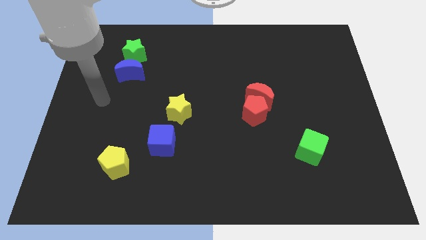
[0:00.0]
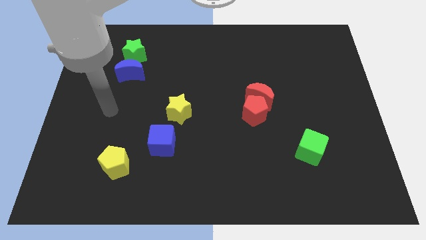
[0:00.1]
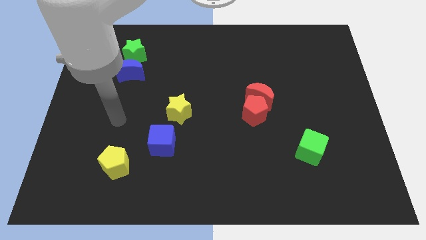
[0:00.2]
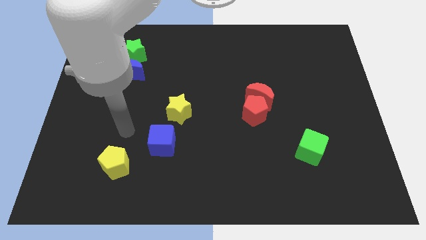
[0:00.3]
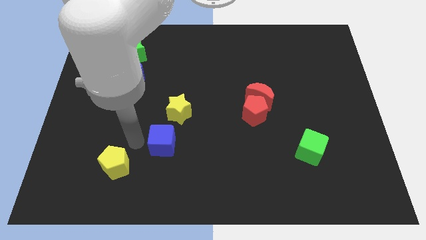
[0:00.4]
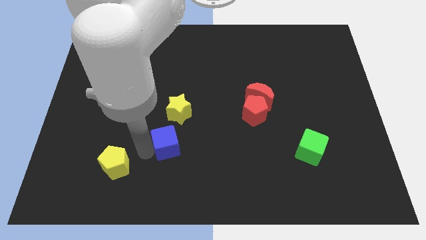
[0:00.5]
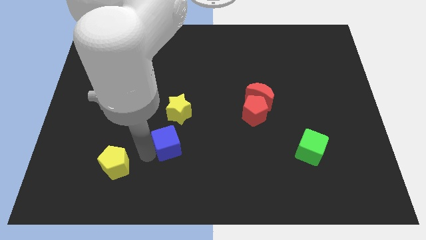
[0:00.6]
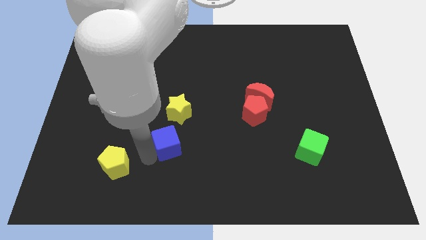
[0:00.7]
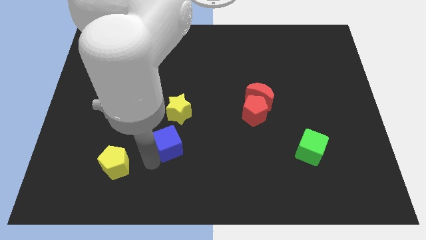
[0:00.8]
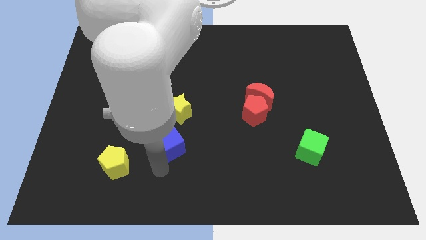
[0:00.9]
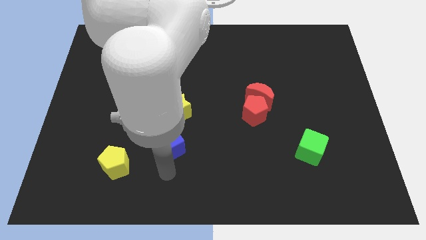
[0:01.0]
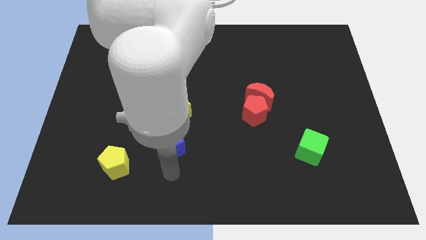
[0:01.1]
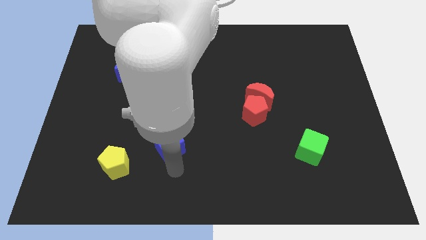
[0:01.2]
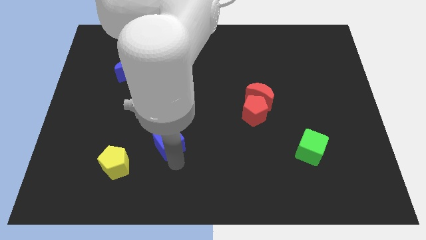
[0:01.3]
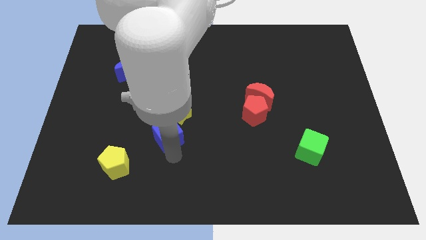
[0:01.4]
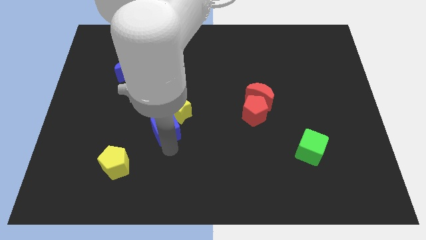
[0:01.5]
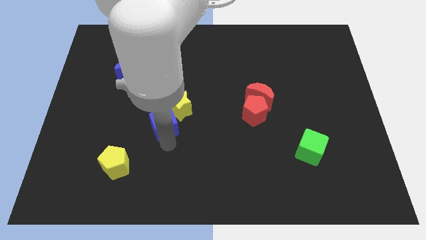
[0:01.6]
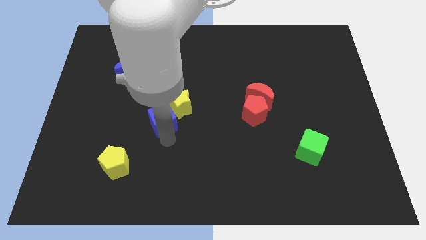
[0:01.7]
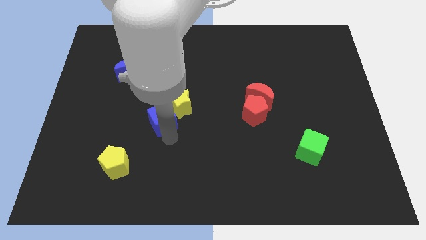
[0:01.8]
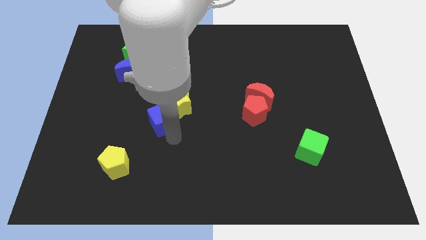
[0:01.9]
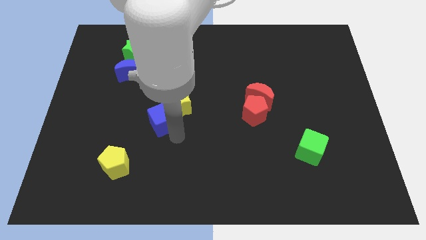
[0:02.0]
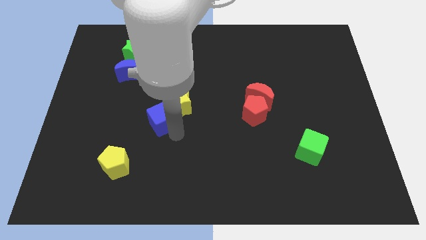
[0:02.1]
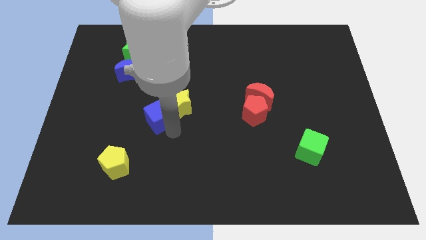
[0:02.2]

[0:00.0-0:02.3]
push the blue cube into the yellow star

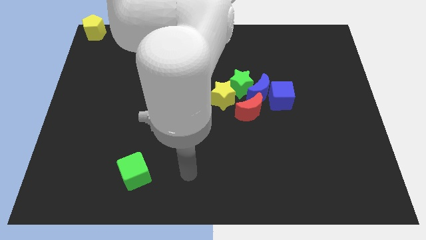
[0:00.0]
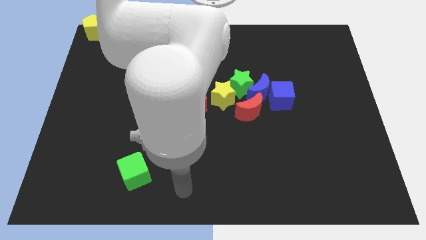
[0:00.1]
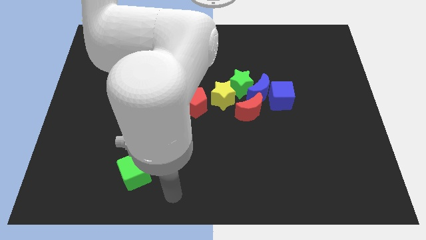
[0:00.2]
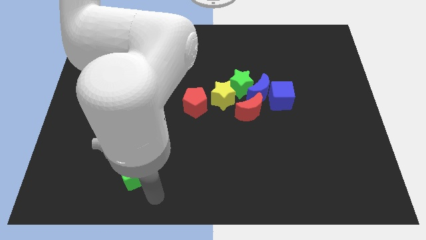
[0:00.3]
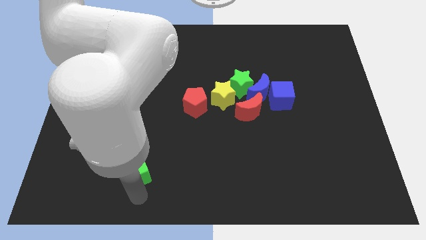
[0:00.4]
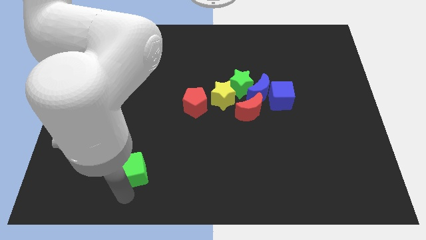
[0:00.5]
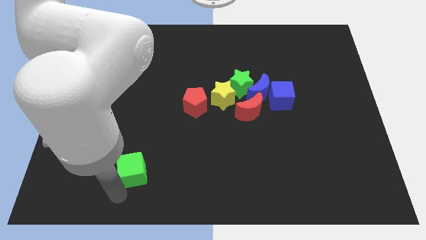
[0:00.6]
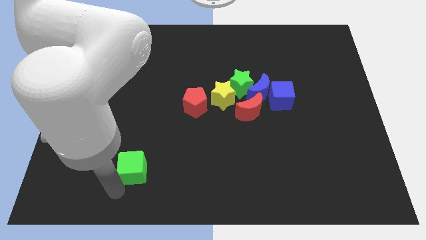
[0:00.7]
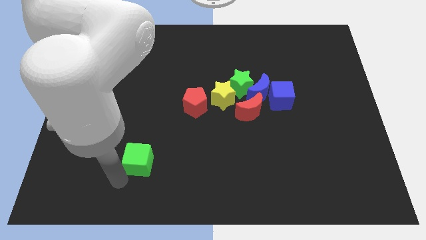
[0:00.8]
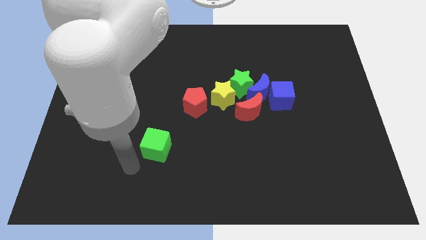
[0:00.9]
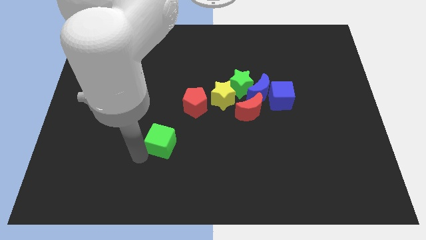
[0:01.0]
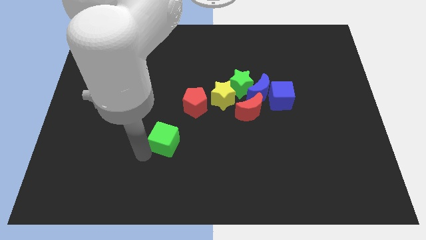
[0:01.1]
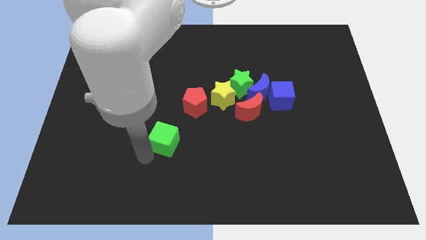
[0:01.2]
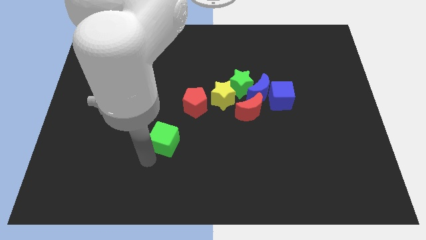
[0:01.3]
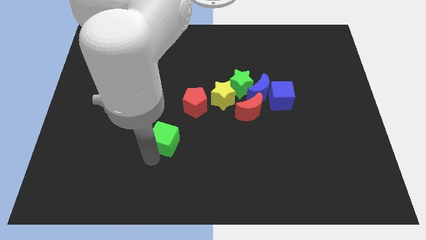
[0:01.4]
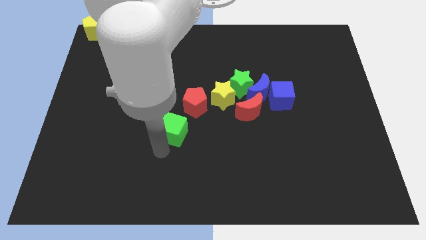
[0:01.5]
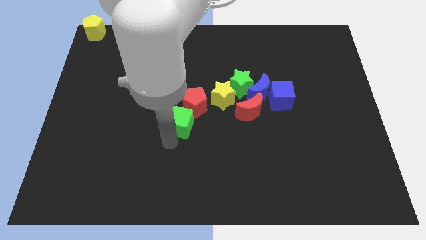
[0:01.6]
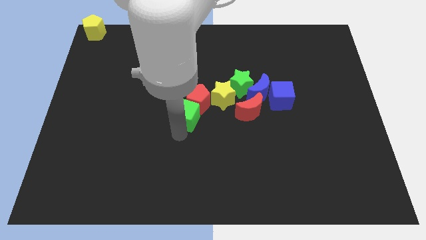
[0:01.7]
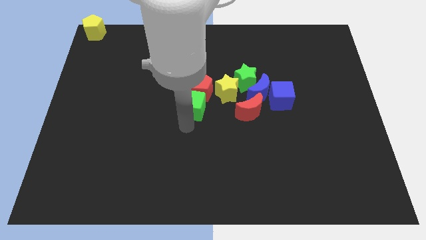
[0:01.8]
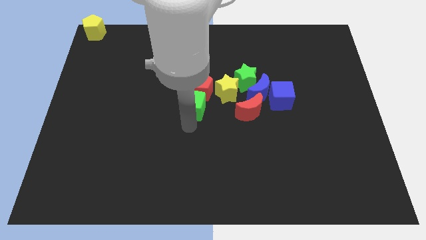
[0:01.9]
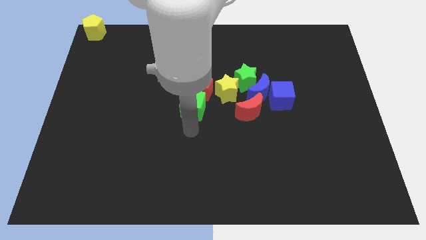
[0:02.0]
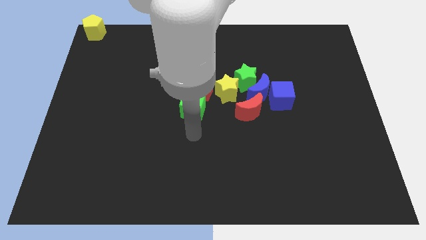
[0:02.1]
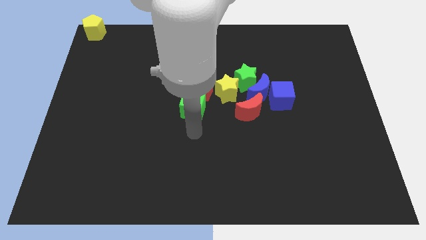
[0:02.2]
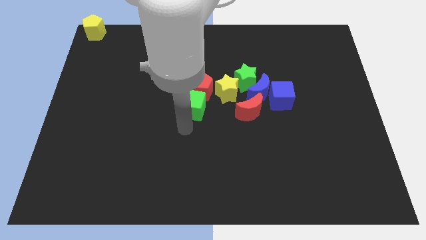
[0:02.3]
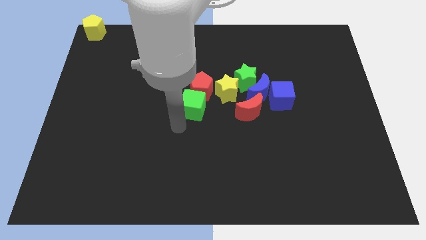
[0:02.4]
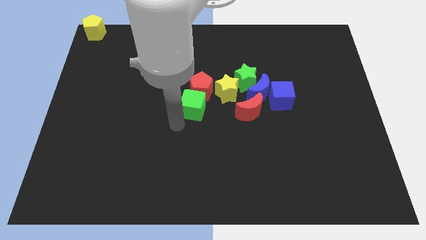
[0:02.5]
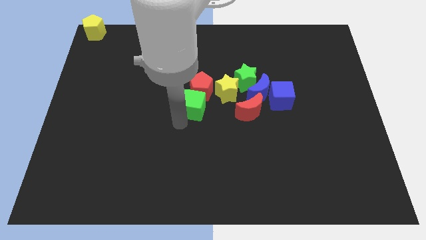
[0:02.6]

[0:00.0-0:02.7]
push the green cube into the red pentagon

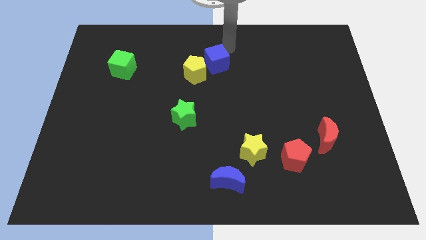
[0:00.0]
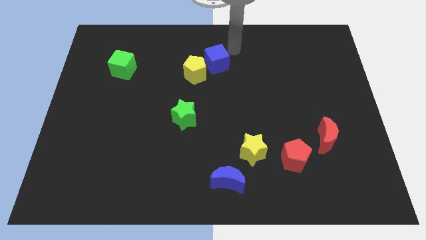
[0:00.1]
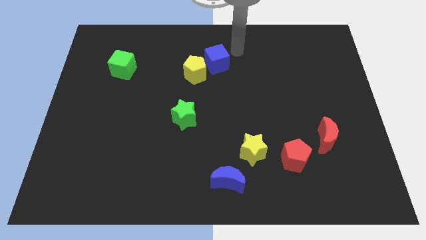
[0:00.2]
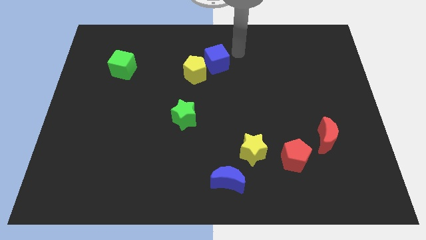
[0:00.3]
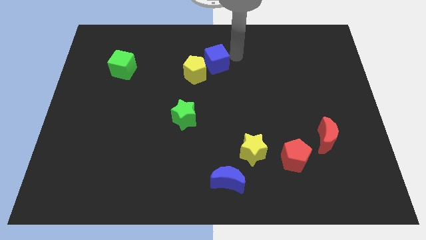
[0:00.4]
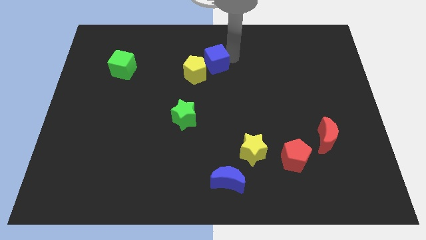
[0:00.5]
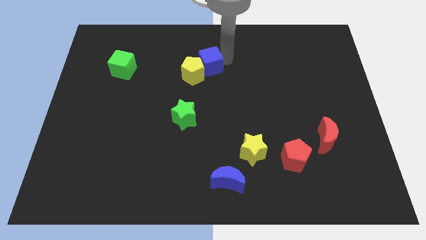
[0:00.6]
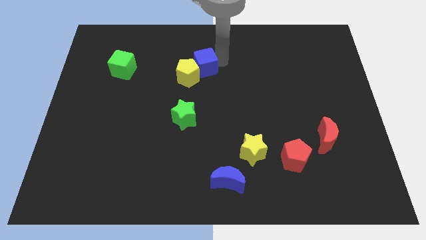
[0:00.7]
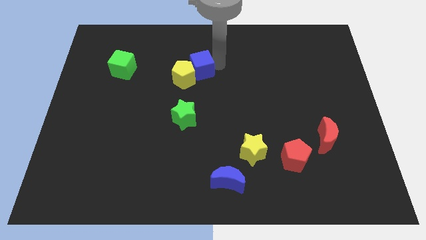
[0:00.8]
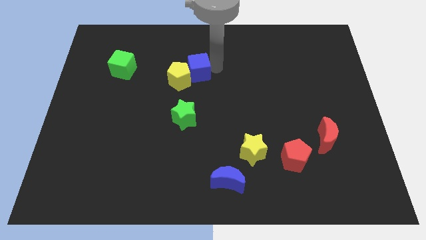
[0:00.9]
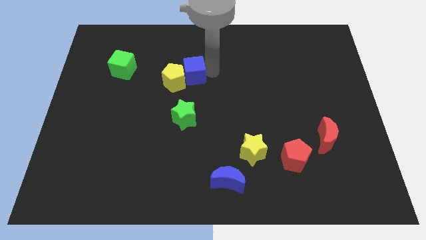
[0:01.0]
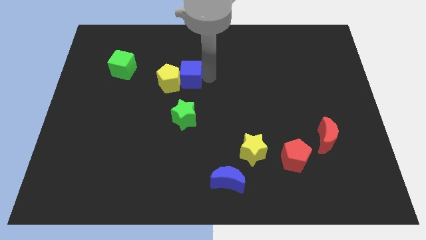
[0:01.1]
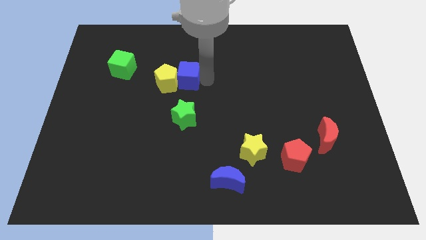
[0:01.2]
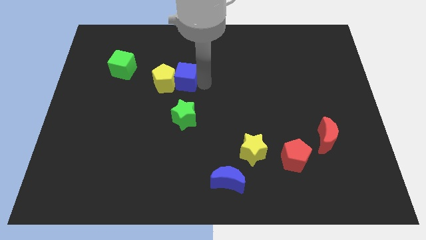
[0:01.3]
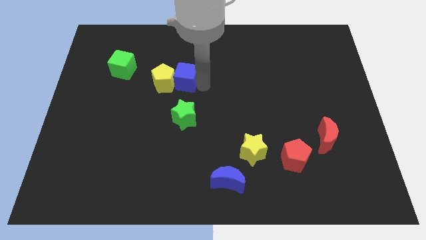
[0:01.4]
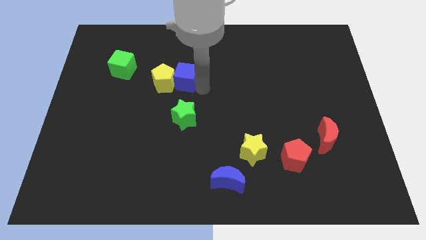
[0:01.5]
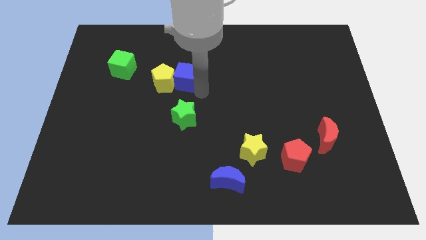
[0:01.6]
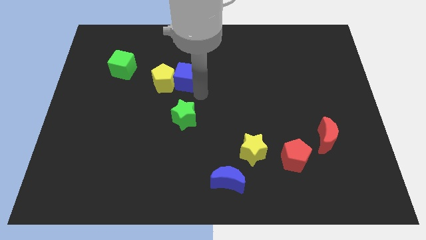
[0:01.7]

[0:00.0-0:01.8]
push the blue cube and yellow pentagon downward

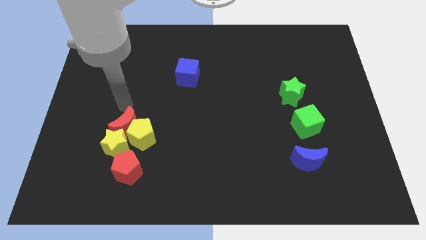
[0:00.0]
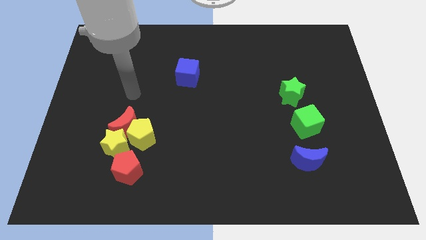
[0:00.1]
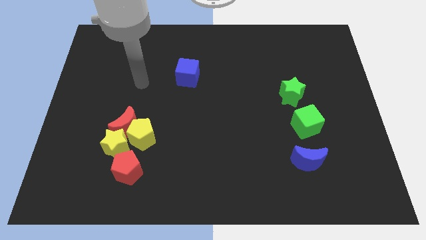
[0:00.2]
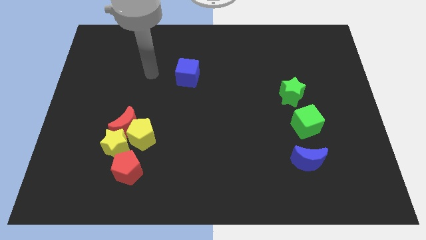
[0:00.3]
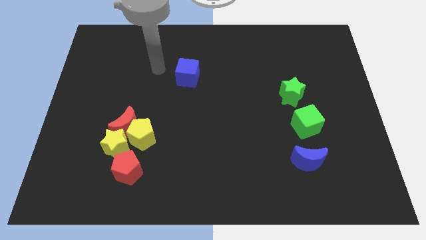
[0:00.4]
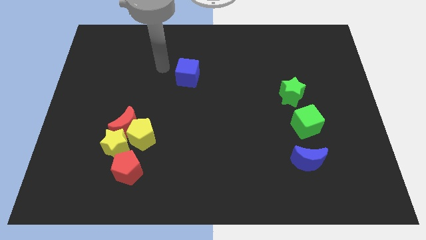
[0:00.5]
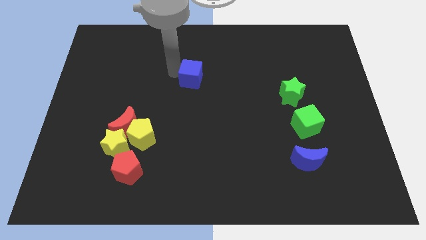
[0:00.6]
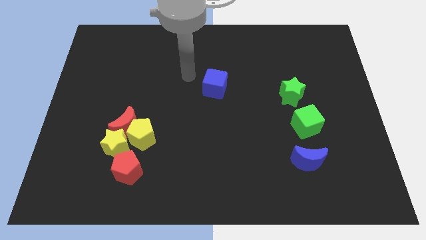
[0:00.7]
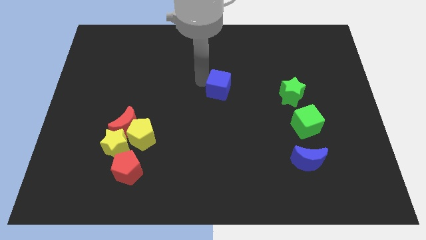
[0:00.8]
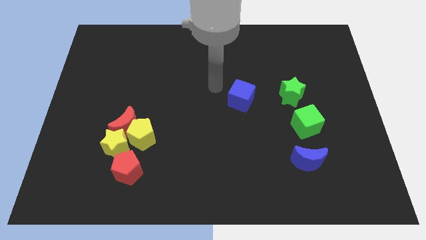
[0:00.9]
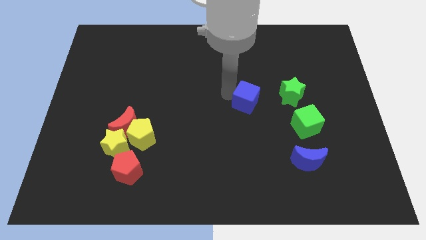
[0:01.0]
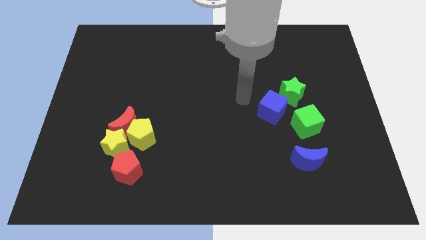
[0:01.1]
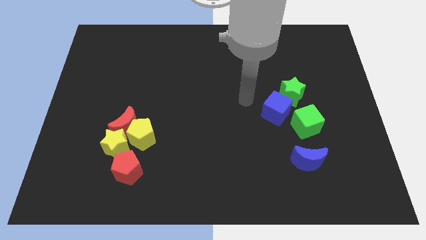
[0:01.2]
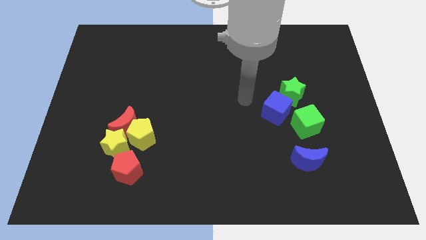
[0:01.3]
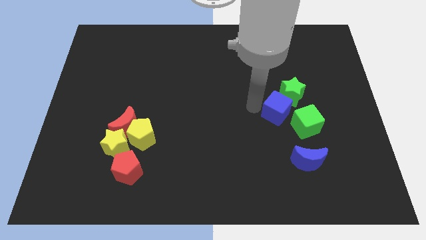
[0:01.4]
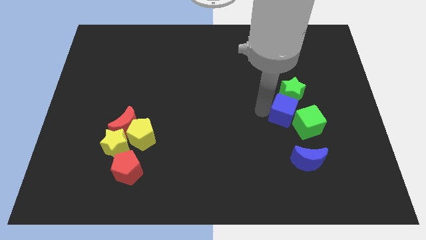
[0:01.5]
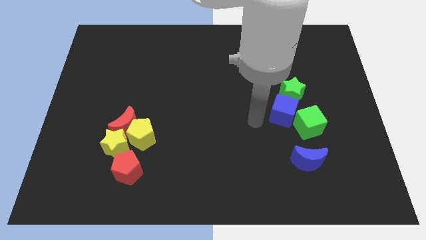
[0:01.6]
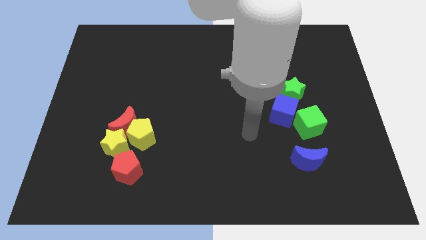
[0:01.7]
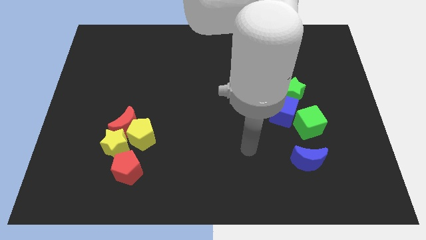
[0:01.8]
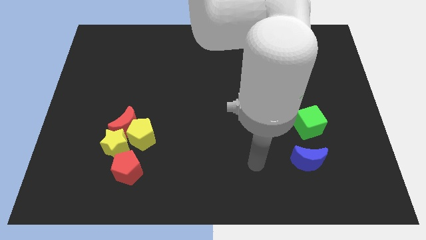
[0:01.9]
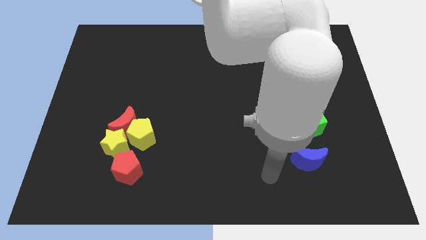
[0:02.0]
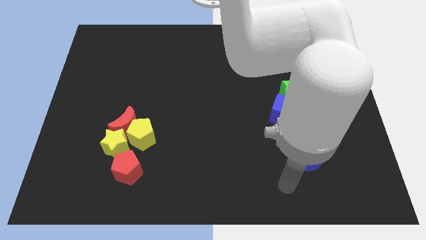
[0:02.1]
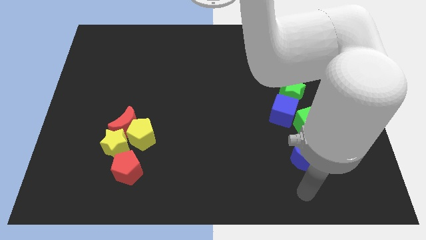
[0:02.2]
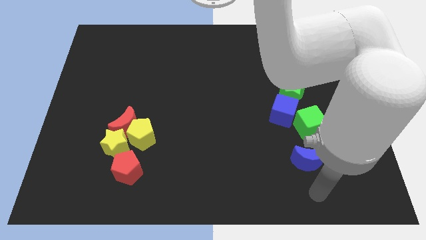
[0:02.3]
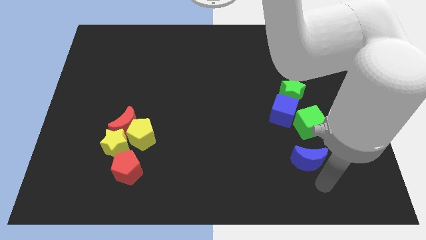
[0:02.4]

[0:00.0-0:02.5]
move the blue cube into the green cube
